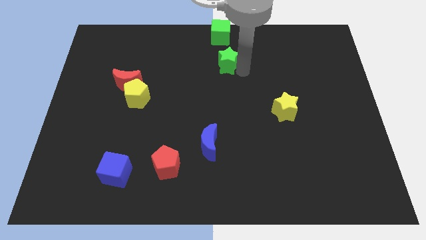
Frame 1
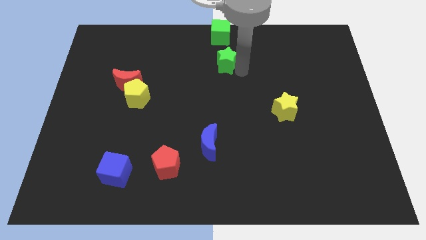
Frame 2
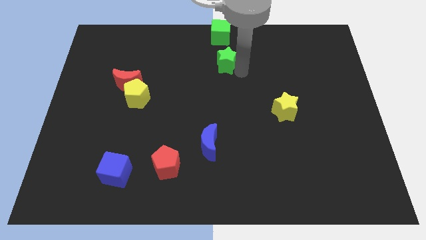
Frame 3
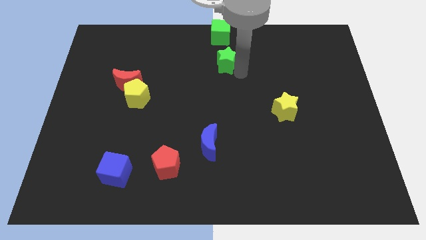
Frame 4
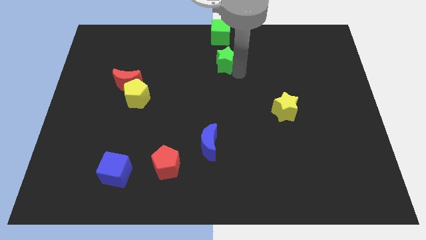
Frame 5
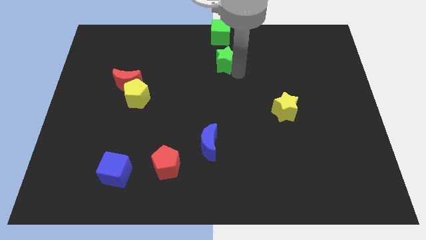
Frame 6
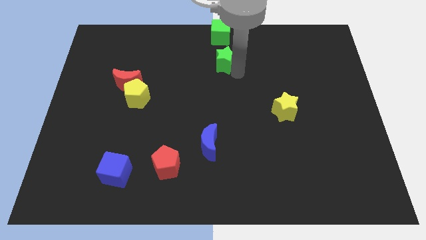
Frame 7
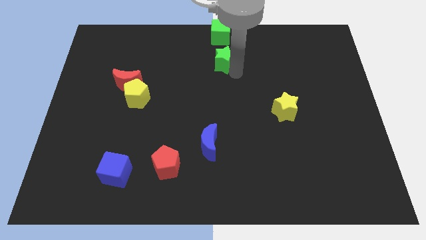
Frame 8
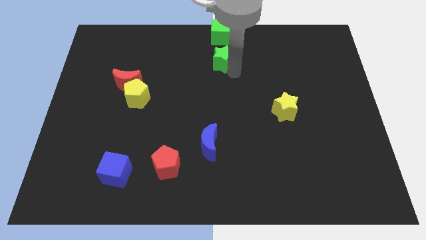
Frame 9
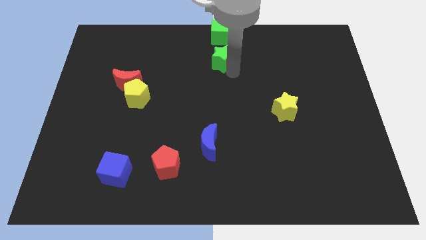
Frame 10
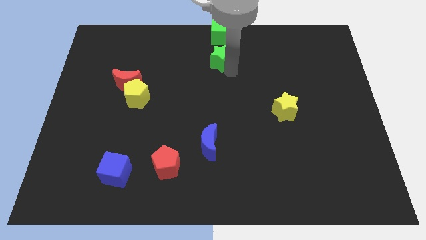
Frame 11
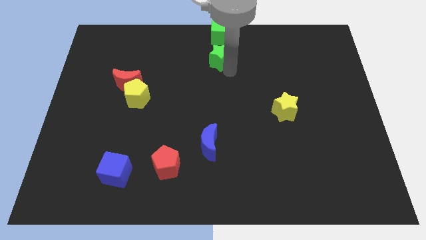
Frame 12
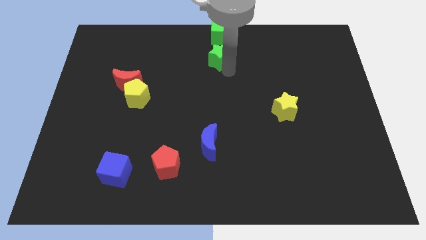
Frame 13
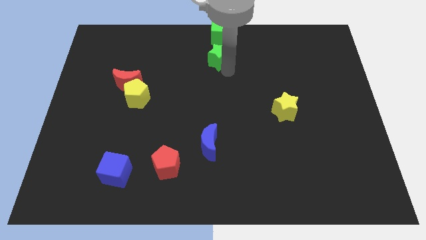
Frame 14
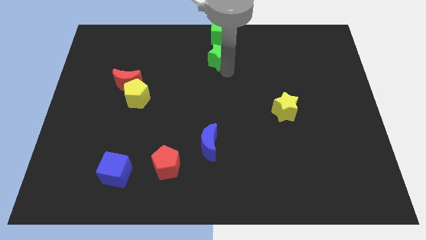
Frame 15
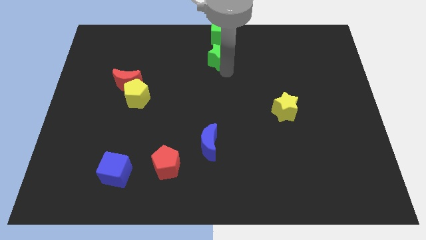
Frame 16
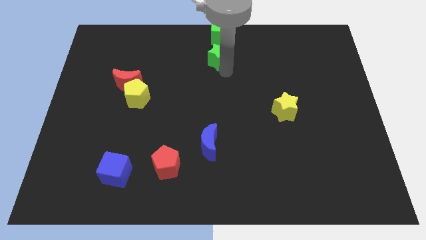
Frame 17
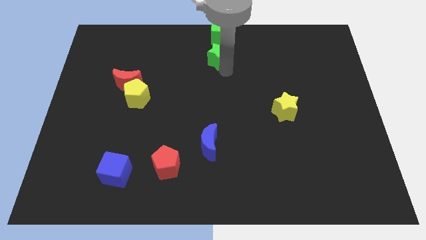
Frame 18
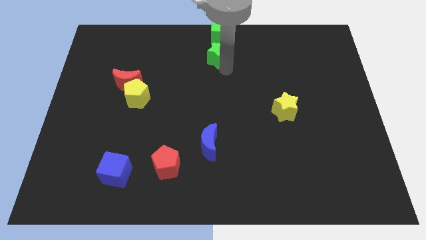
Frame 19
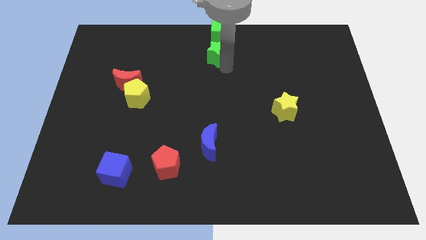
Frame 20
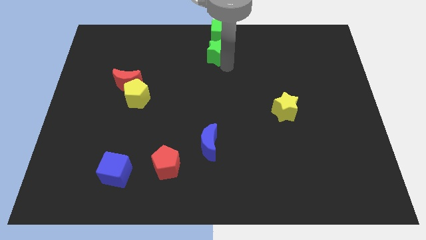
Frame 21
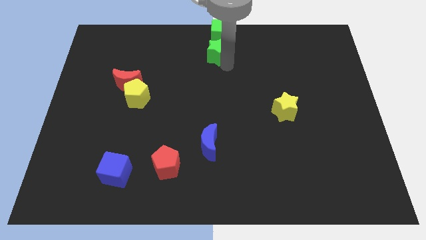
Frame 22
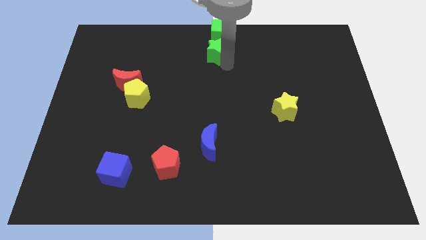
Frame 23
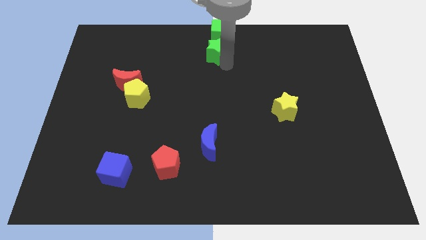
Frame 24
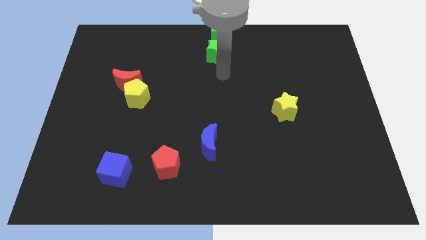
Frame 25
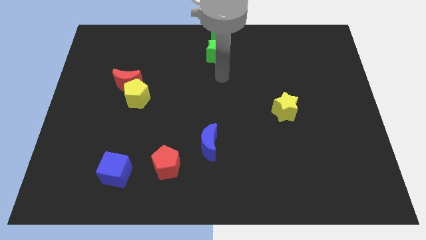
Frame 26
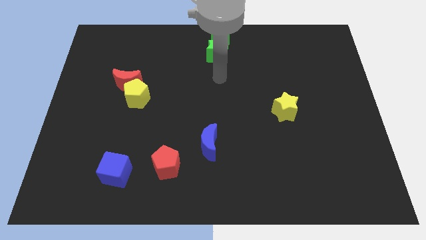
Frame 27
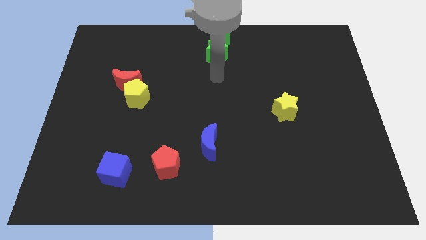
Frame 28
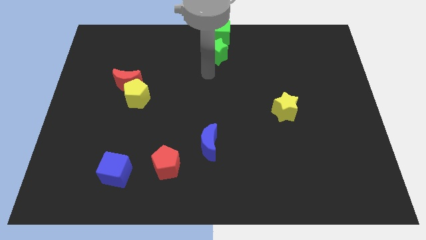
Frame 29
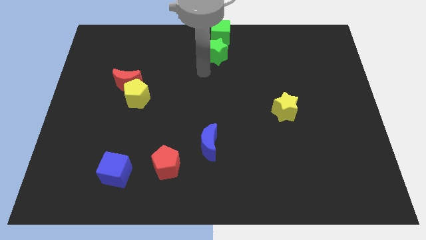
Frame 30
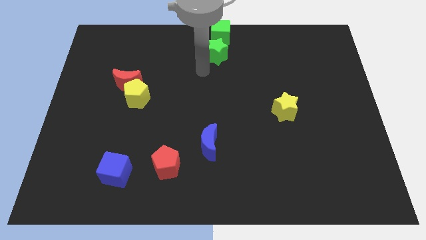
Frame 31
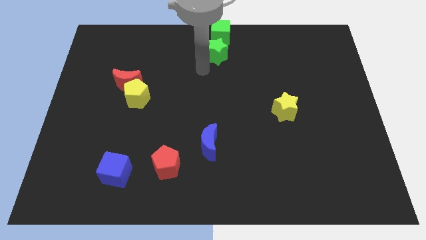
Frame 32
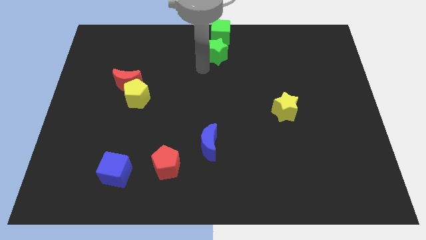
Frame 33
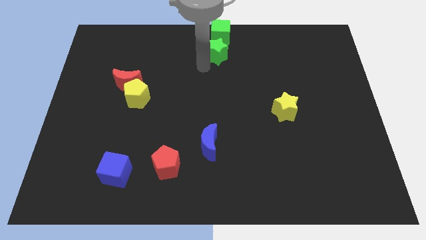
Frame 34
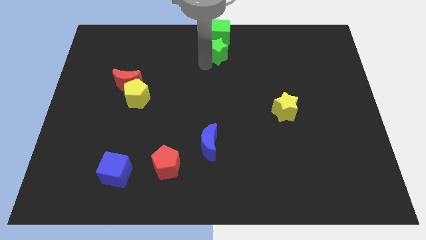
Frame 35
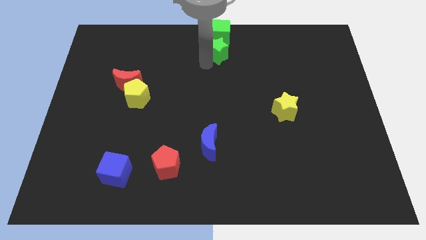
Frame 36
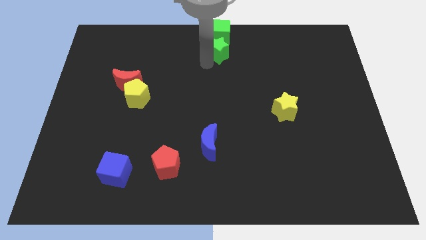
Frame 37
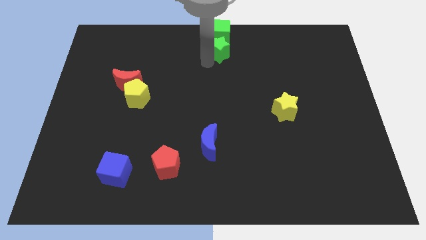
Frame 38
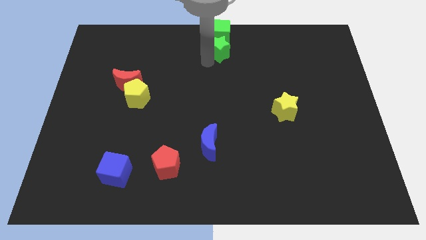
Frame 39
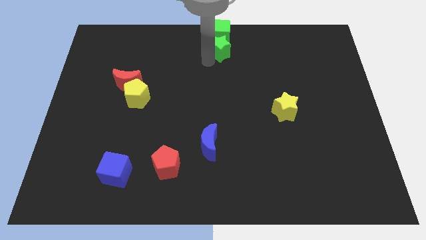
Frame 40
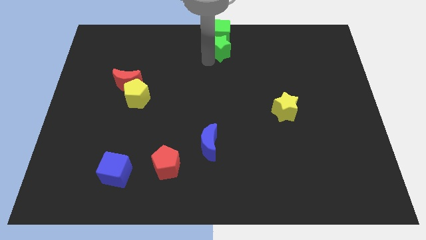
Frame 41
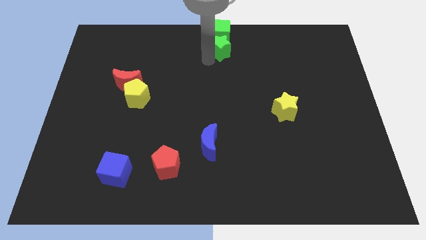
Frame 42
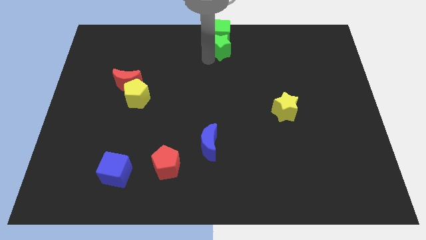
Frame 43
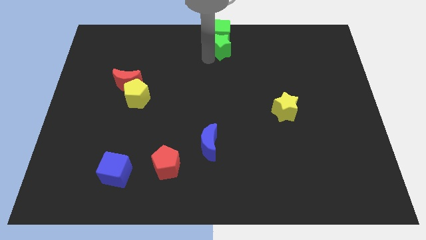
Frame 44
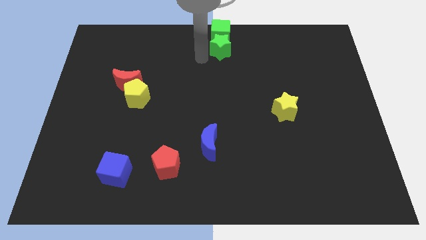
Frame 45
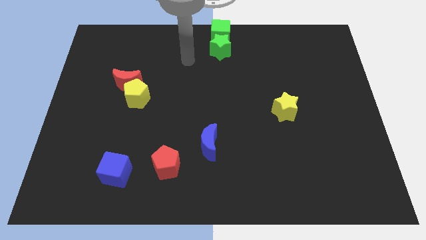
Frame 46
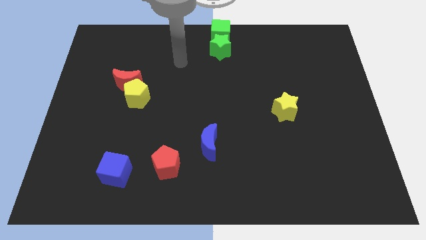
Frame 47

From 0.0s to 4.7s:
push the green star into the green cube

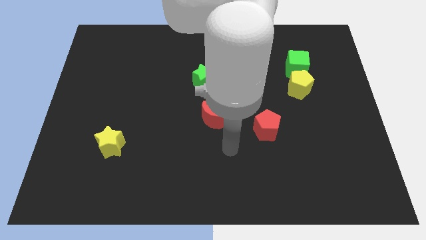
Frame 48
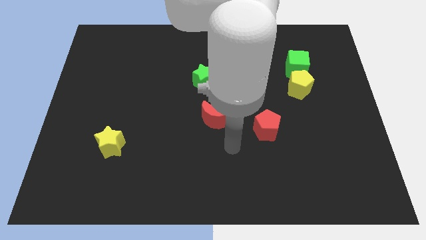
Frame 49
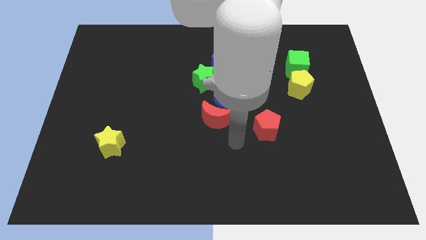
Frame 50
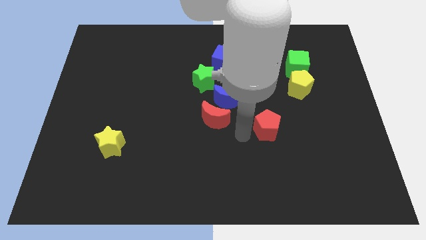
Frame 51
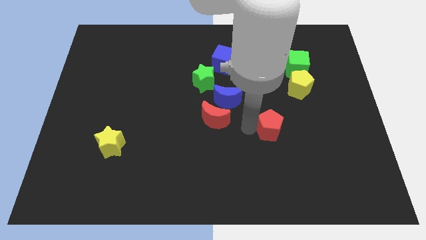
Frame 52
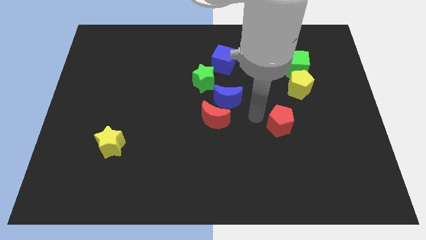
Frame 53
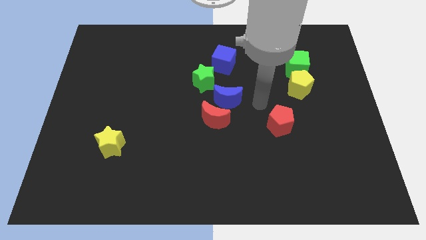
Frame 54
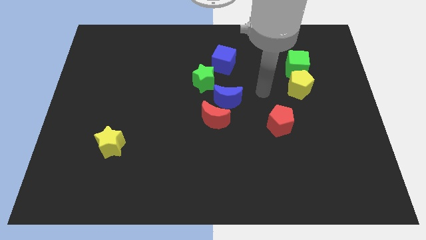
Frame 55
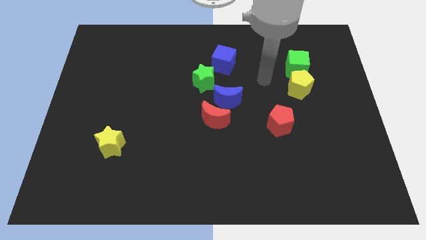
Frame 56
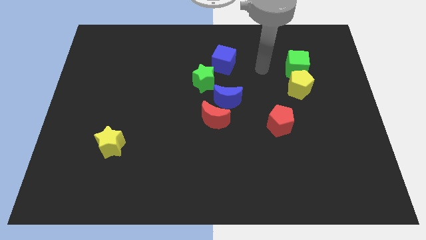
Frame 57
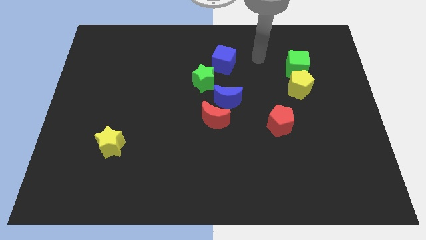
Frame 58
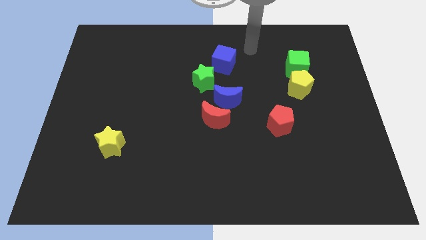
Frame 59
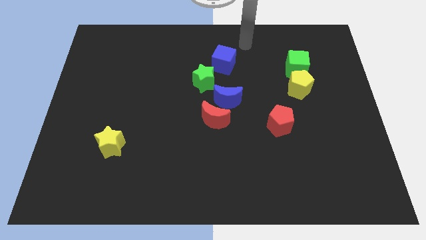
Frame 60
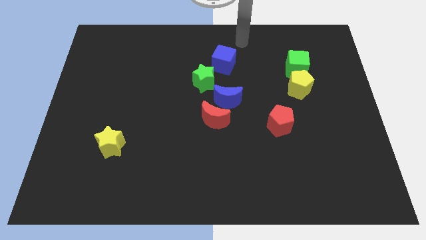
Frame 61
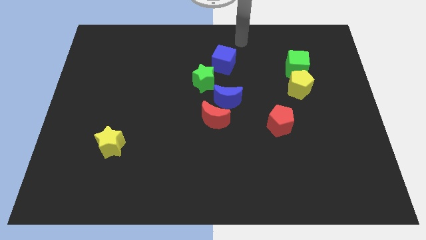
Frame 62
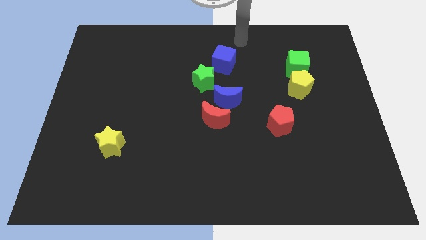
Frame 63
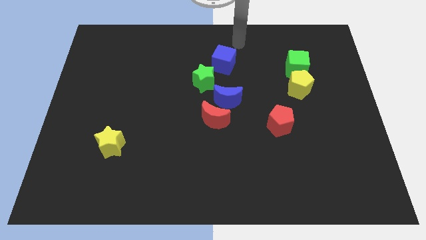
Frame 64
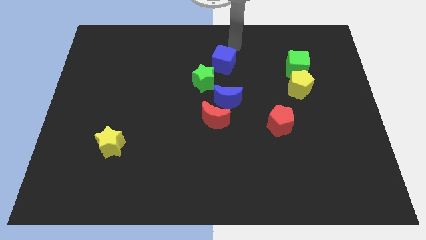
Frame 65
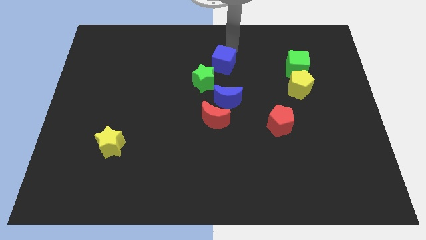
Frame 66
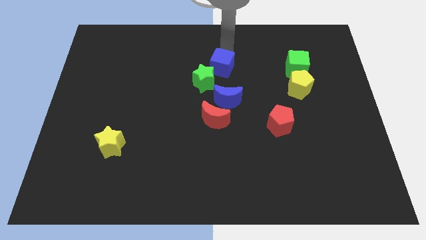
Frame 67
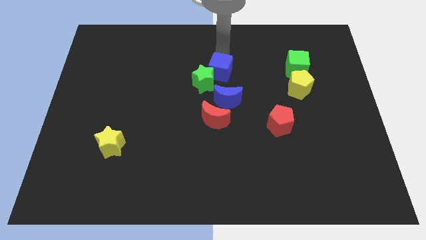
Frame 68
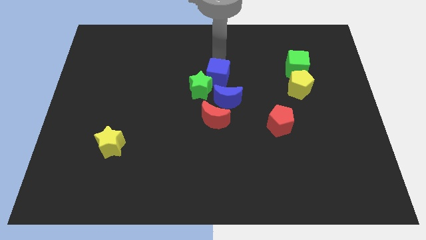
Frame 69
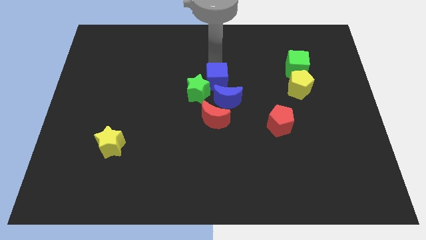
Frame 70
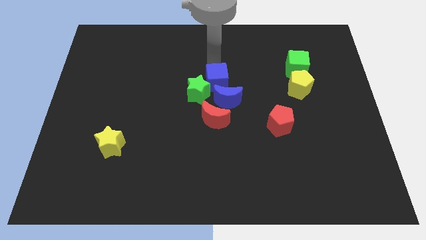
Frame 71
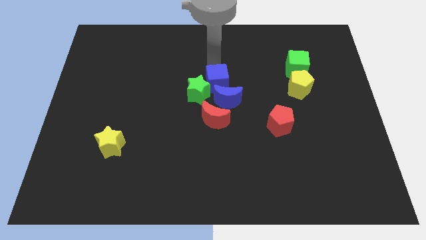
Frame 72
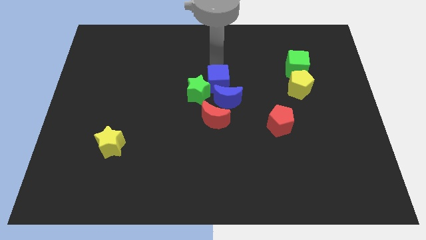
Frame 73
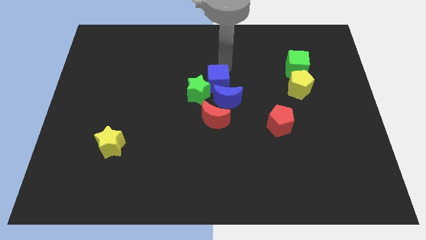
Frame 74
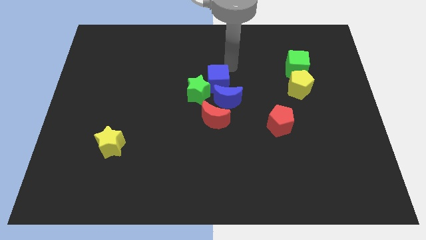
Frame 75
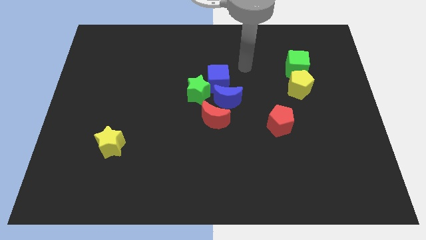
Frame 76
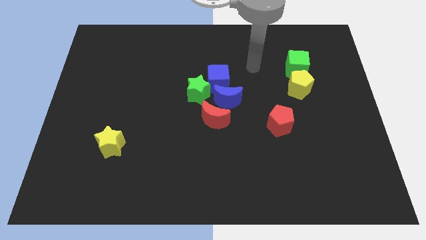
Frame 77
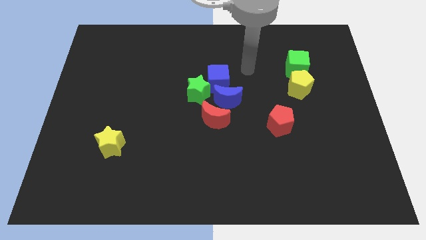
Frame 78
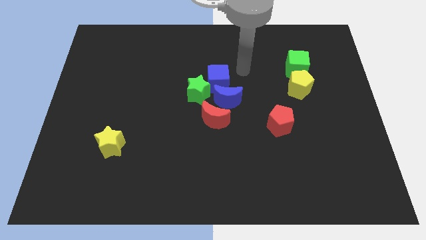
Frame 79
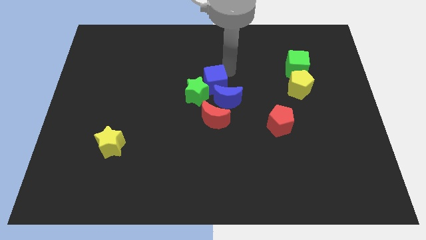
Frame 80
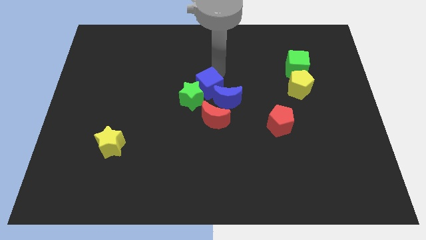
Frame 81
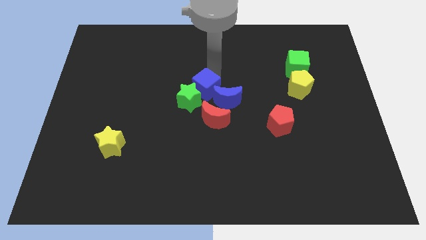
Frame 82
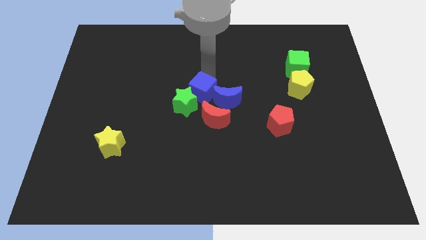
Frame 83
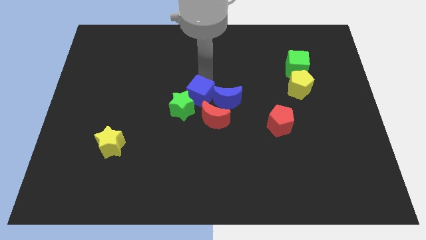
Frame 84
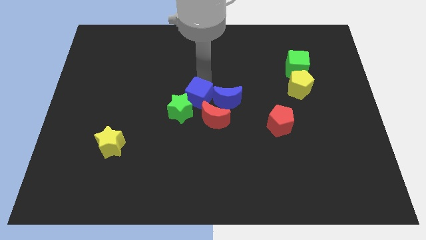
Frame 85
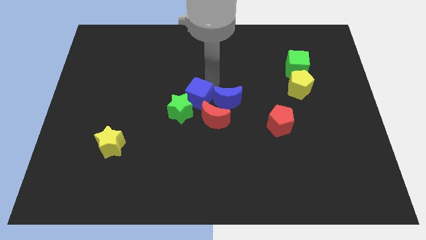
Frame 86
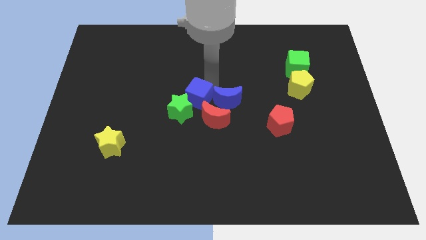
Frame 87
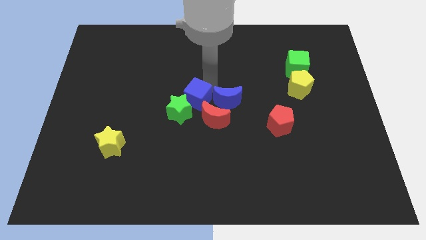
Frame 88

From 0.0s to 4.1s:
push the blue cube into the green star

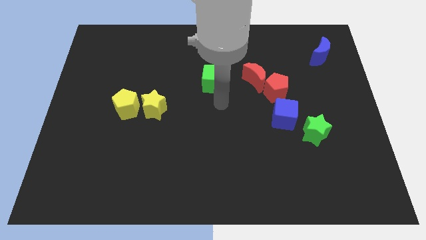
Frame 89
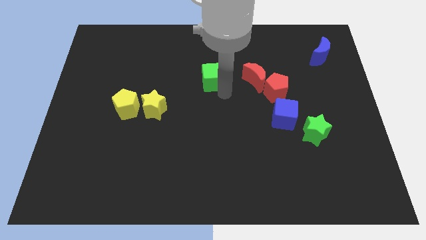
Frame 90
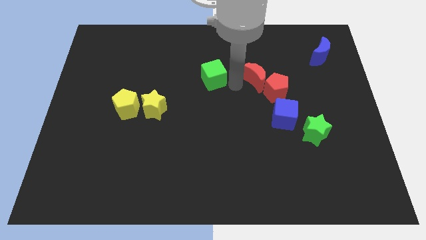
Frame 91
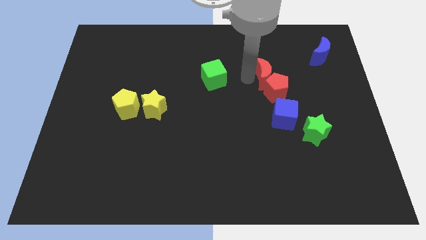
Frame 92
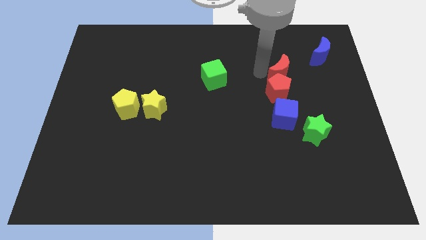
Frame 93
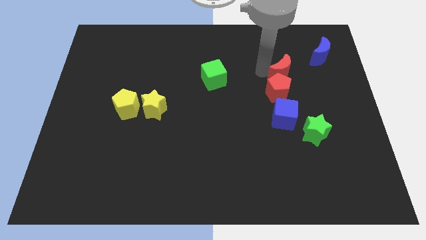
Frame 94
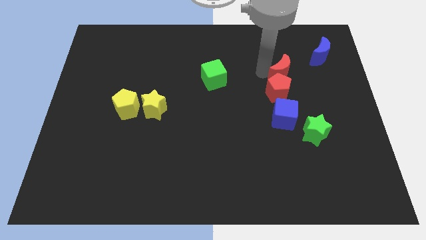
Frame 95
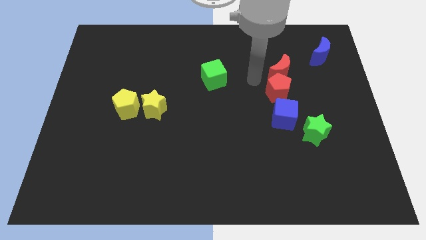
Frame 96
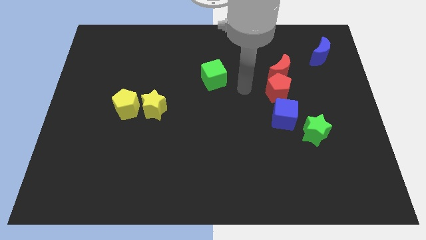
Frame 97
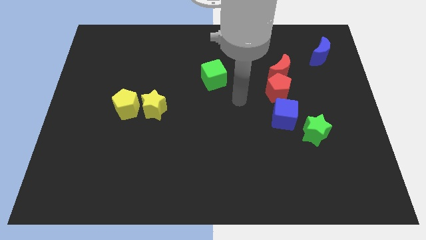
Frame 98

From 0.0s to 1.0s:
push the red moon to the right side slightly
